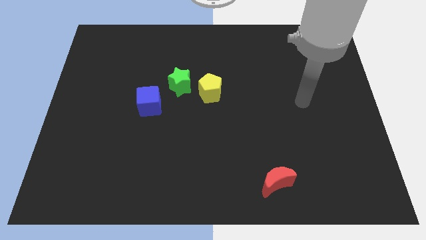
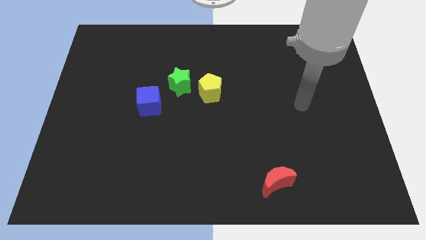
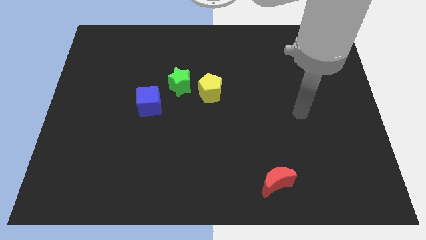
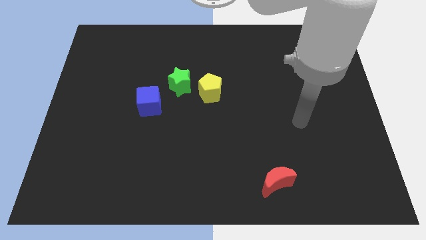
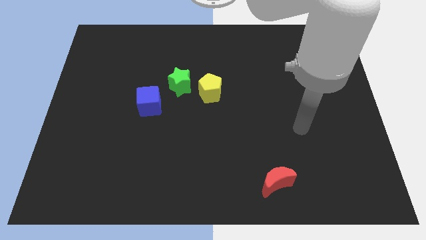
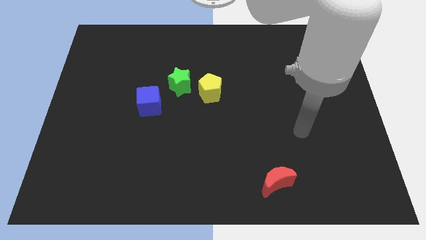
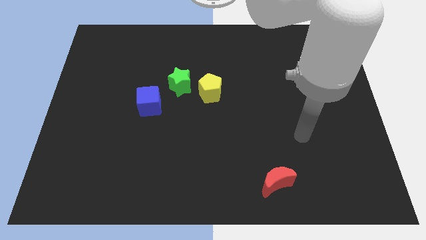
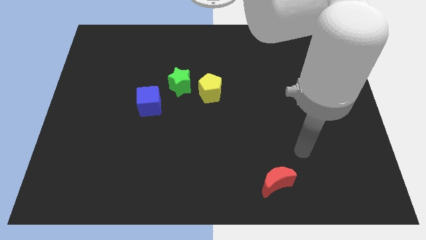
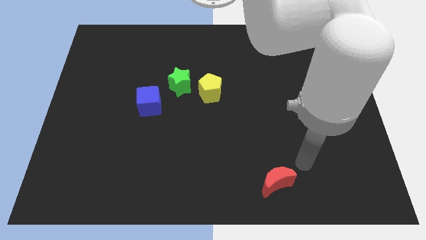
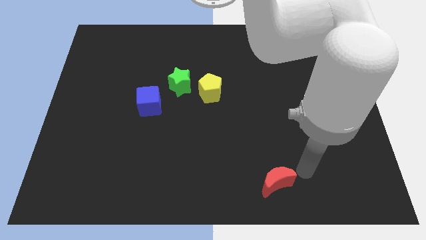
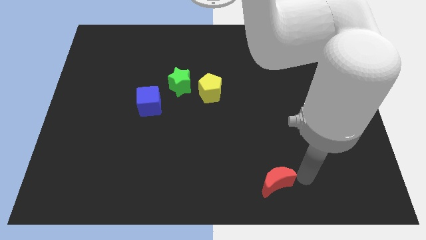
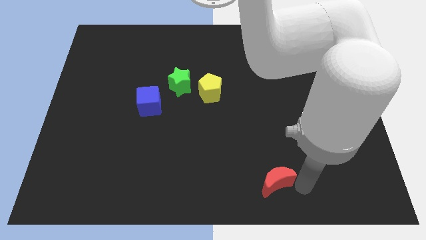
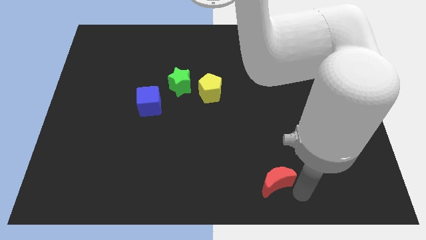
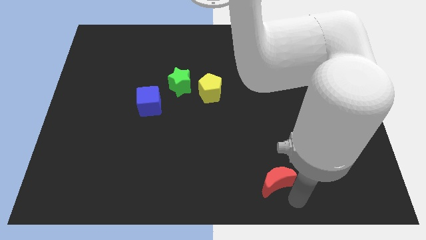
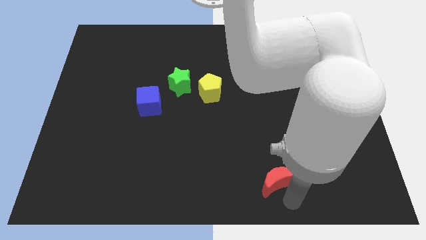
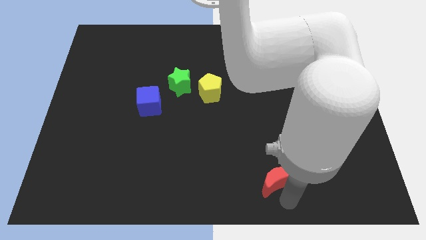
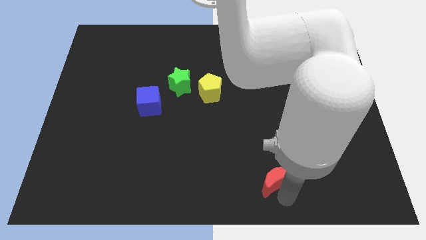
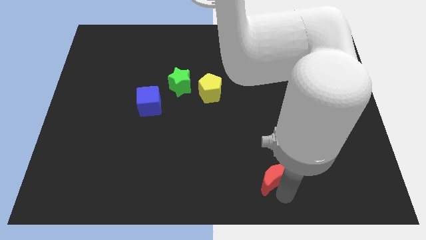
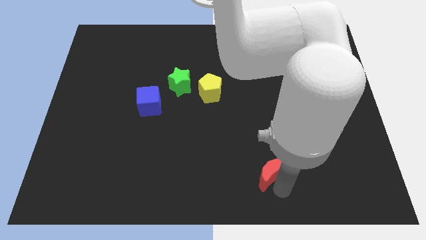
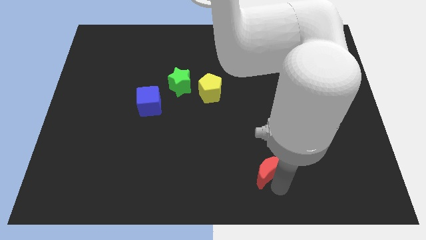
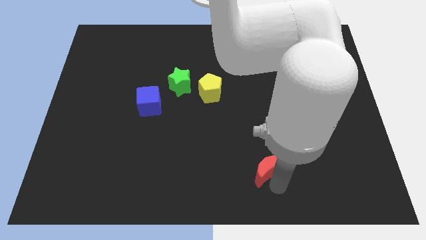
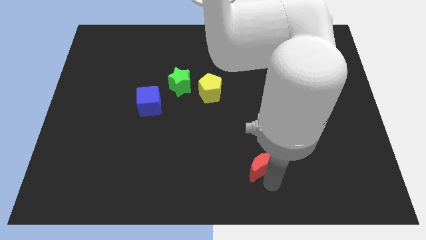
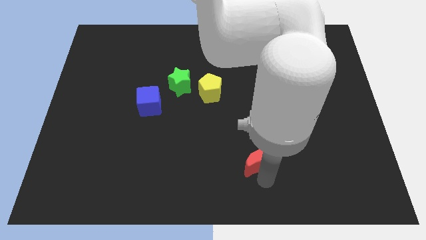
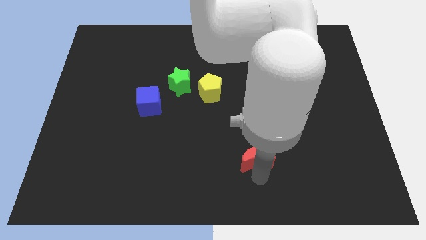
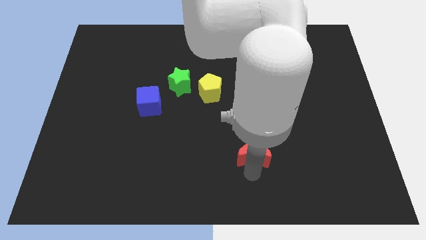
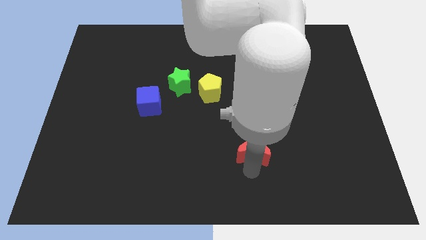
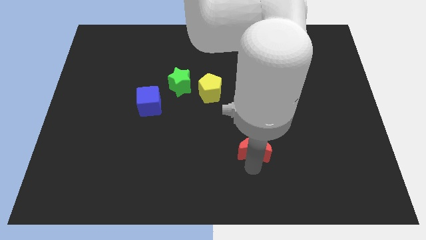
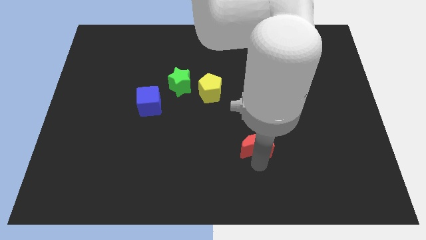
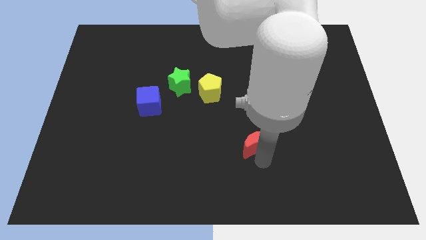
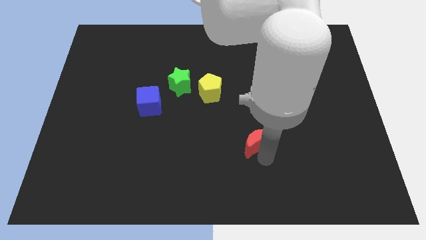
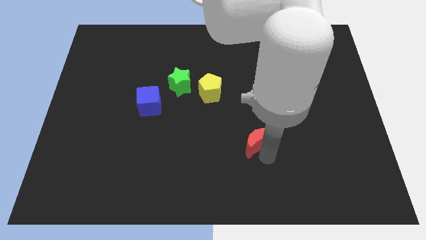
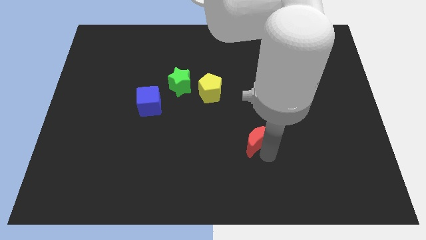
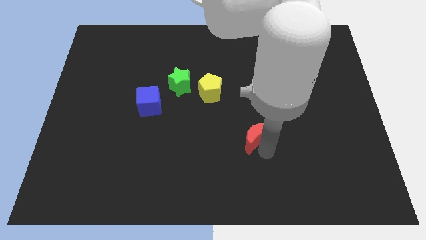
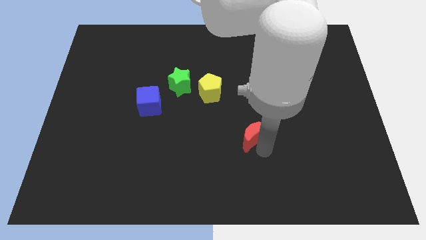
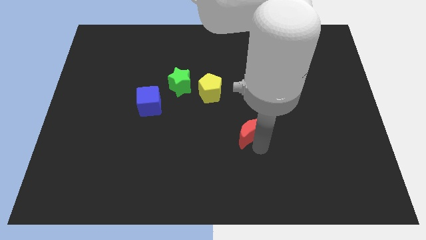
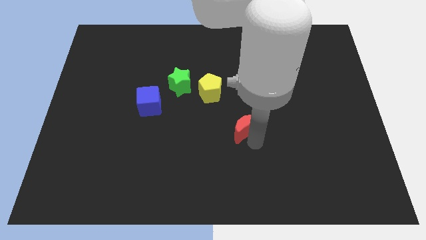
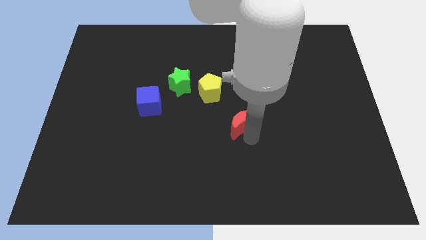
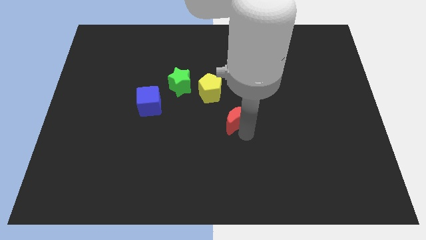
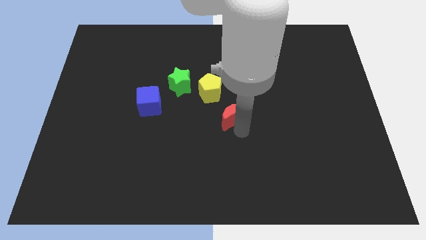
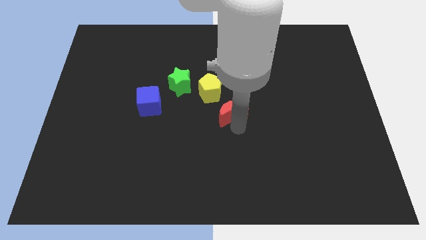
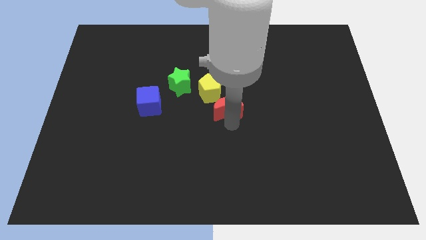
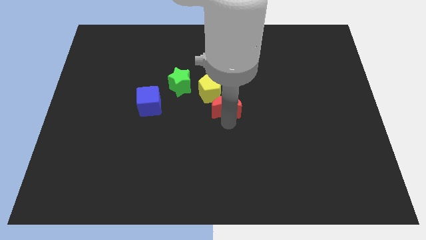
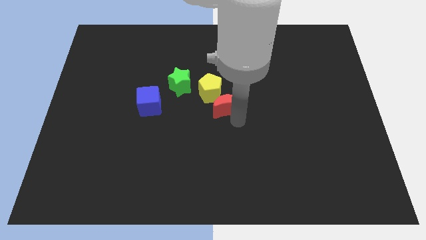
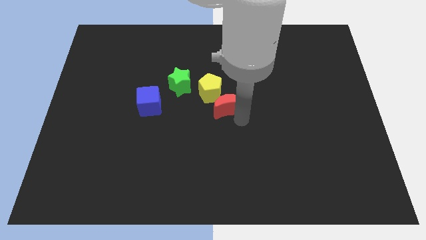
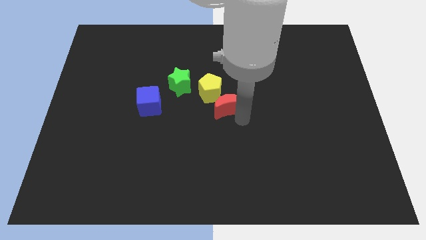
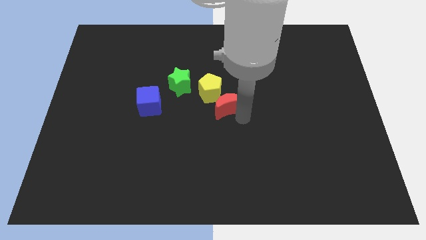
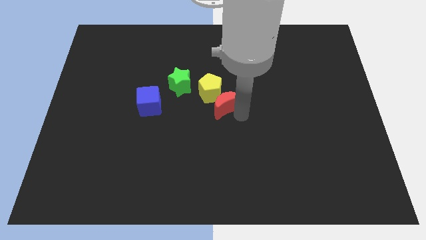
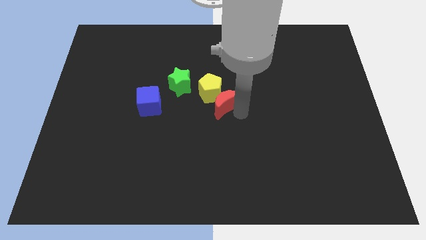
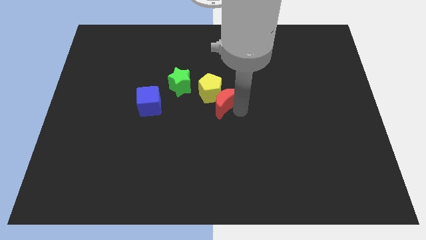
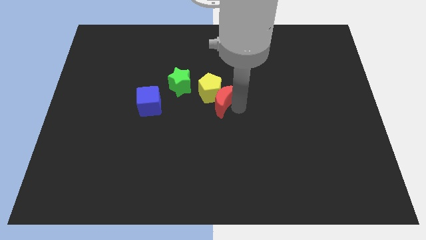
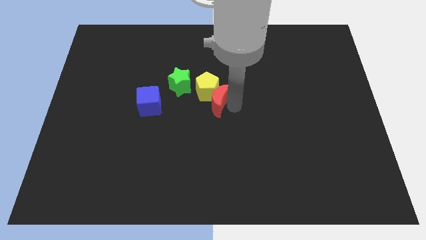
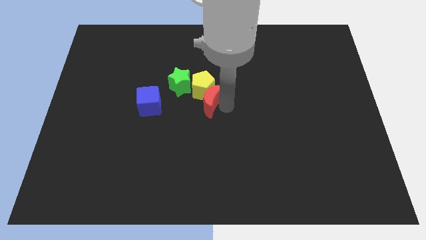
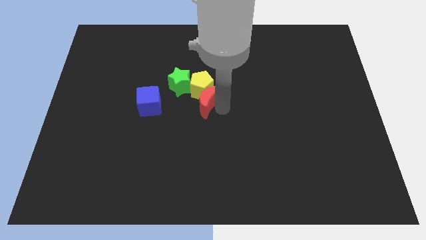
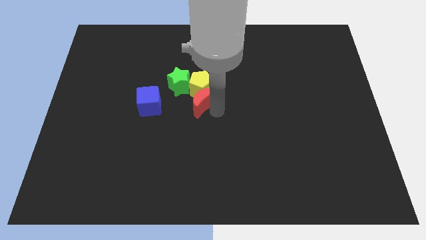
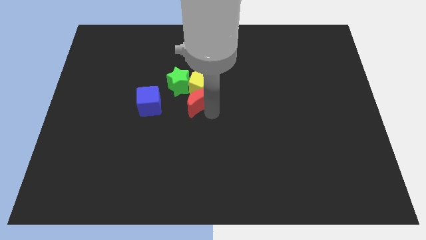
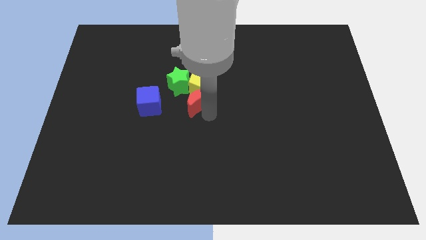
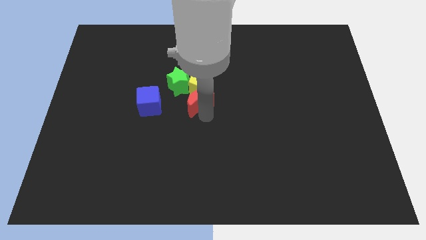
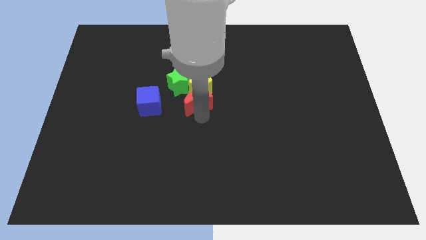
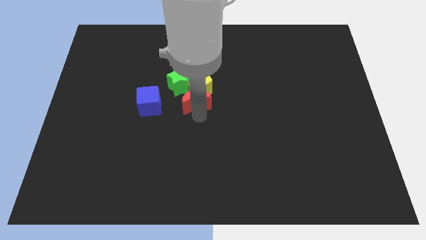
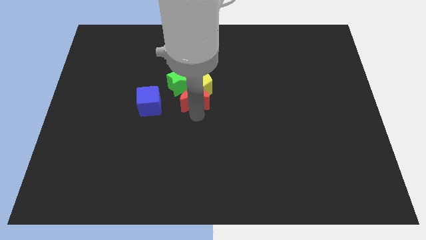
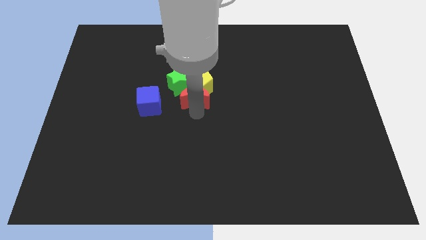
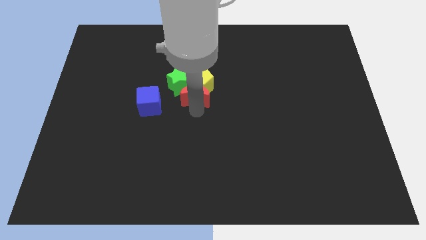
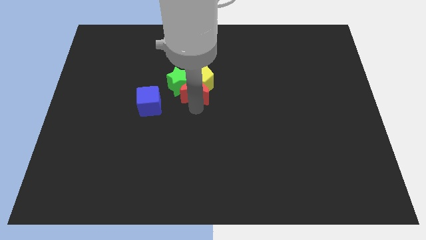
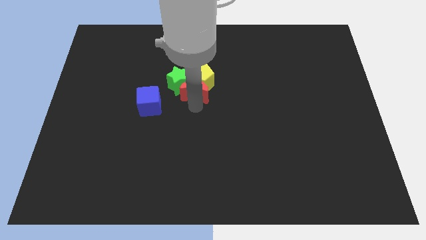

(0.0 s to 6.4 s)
put the red moon close to the star

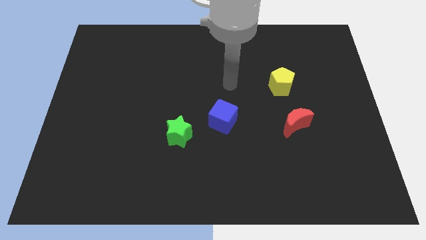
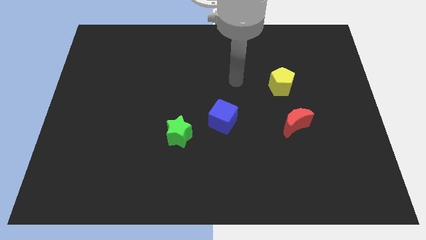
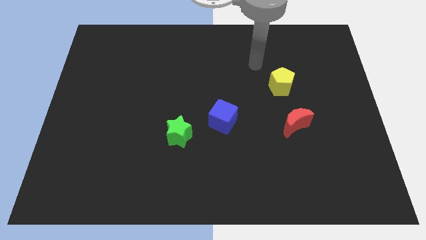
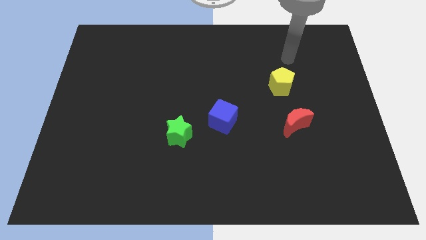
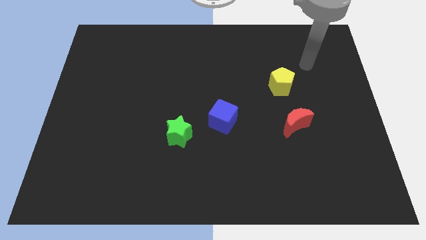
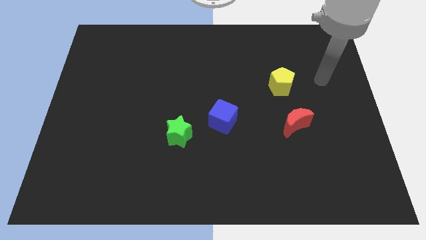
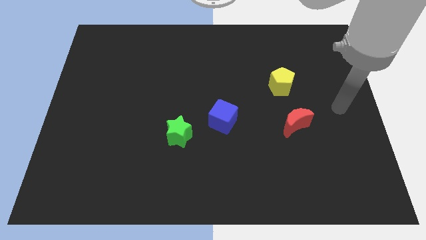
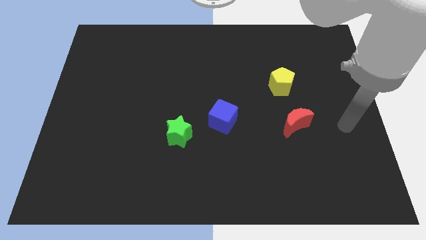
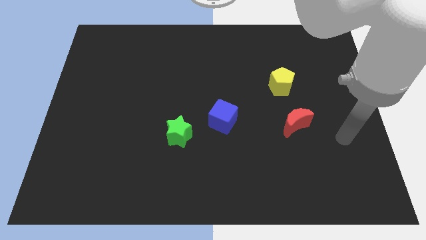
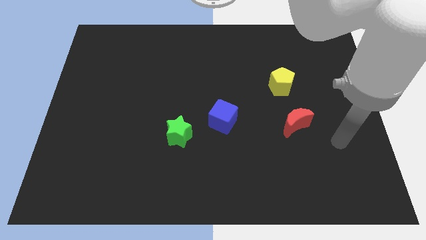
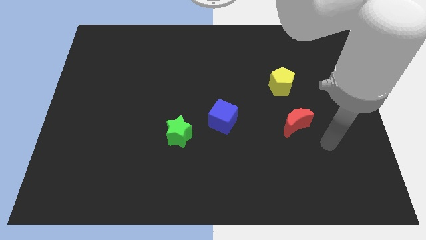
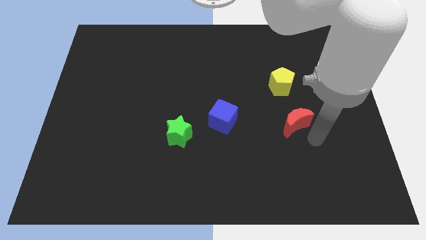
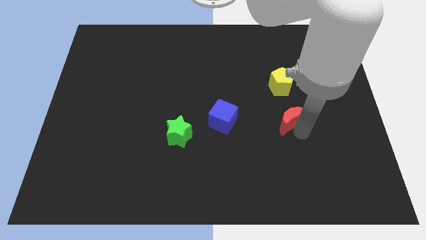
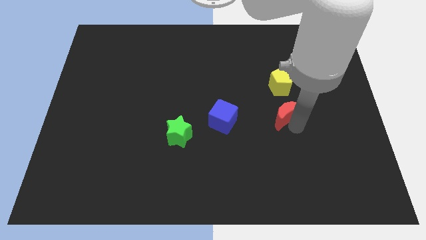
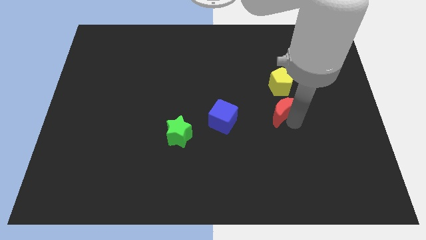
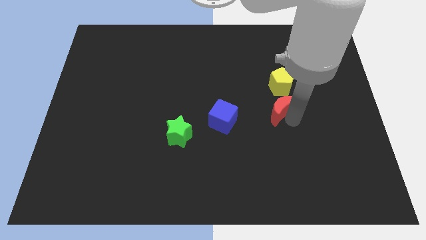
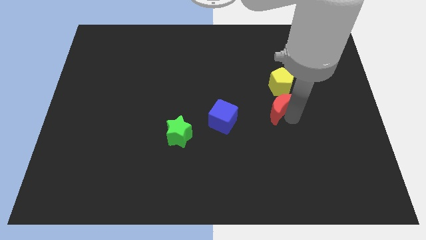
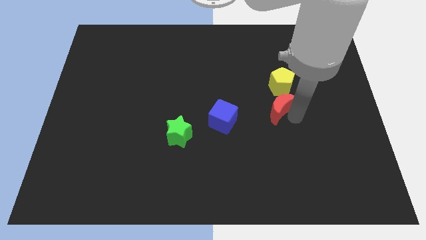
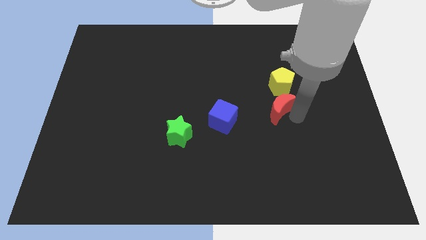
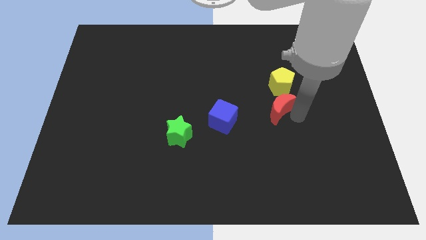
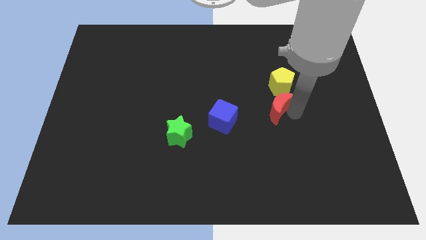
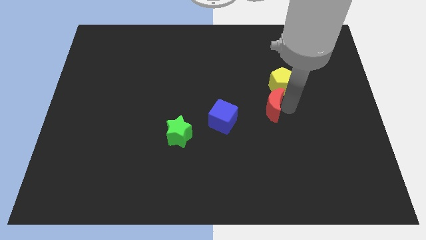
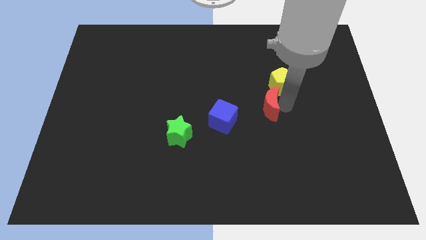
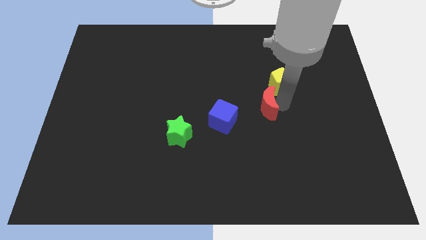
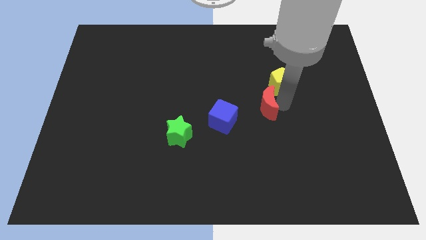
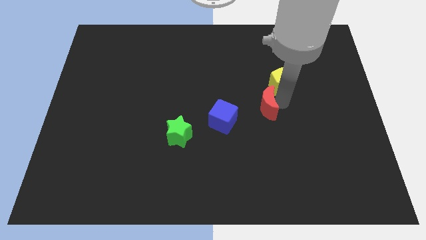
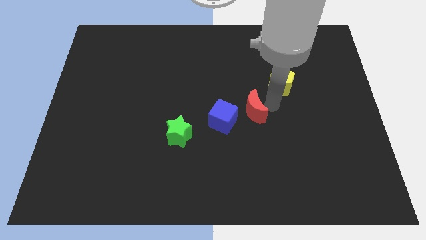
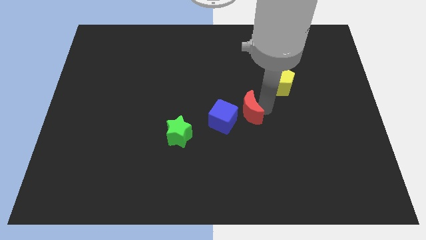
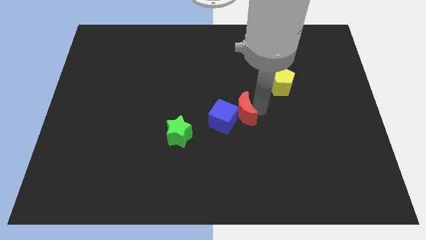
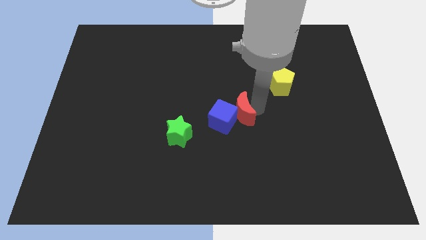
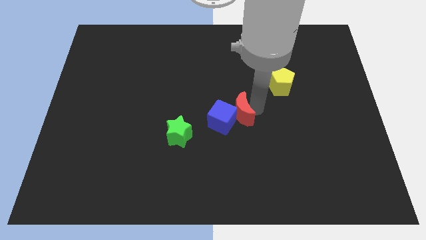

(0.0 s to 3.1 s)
move the moon next to the blue cube
